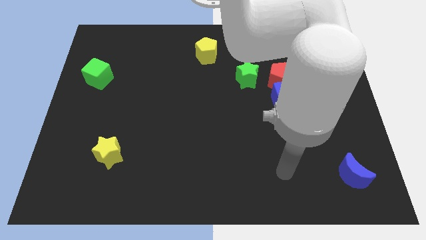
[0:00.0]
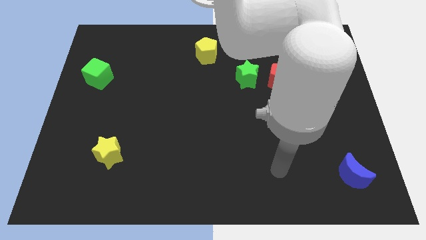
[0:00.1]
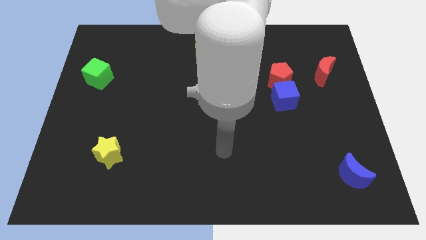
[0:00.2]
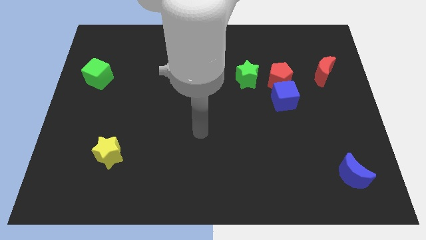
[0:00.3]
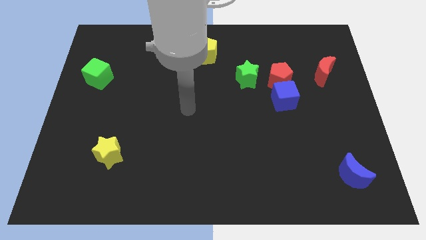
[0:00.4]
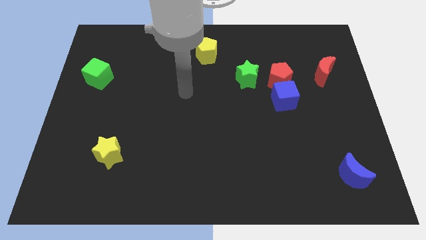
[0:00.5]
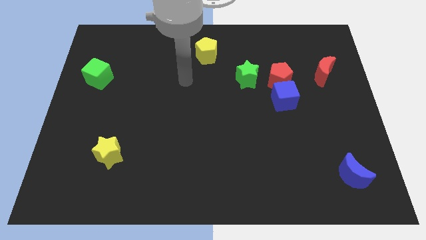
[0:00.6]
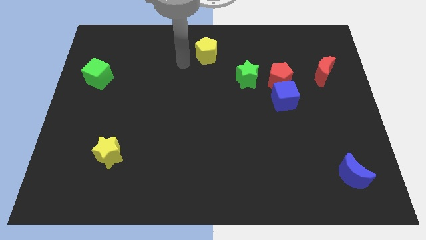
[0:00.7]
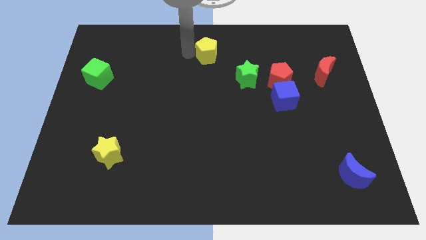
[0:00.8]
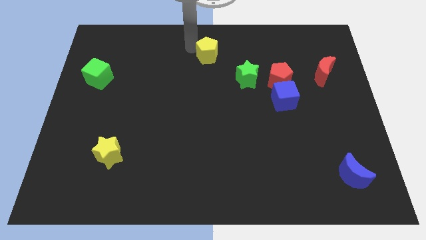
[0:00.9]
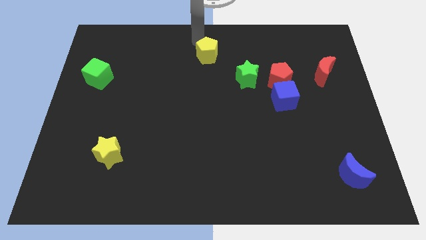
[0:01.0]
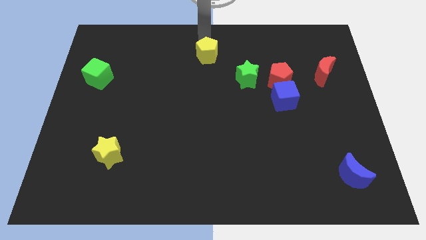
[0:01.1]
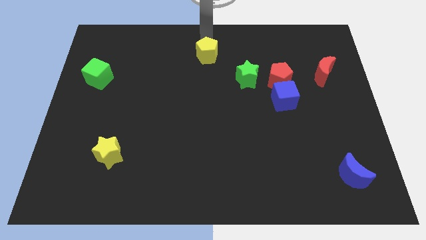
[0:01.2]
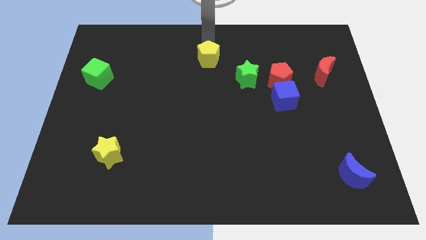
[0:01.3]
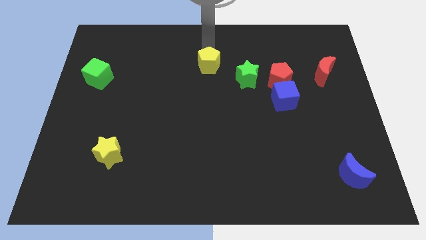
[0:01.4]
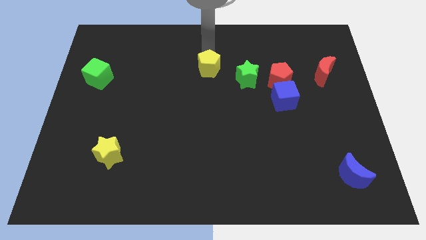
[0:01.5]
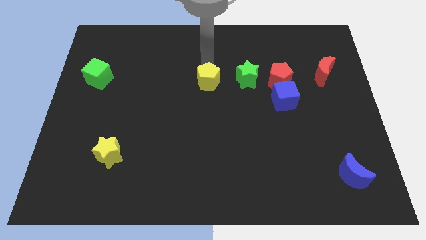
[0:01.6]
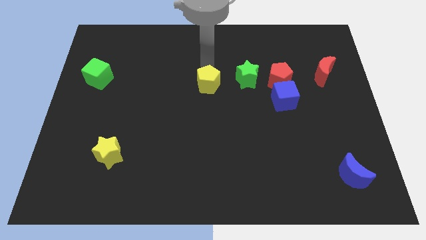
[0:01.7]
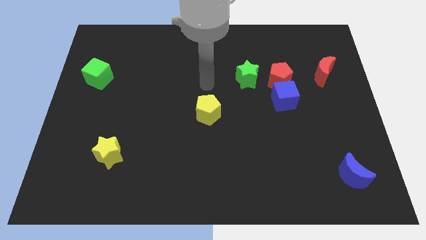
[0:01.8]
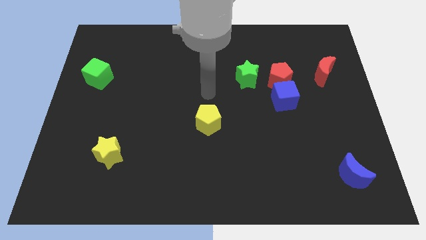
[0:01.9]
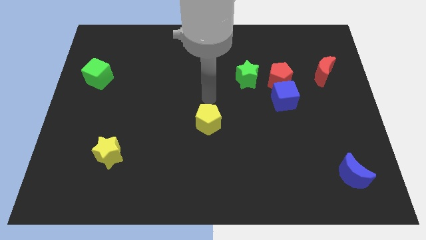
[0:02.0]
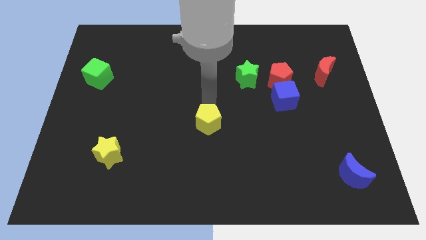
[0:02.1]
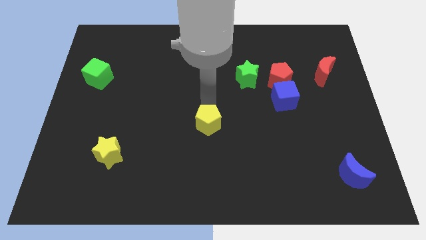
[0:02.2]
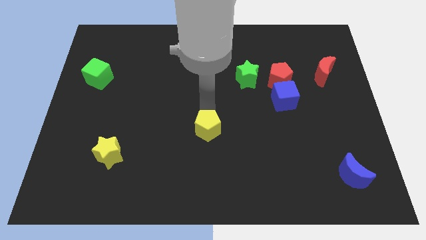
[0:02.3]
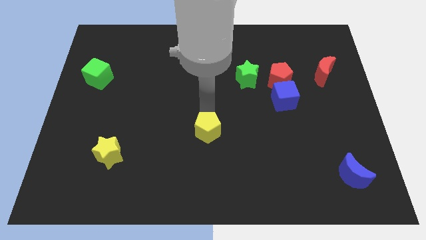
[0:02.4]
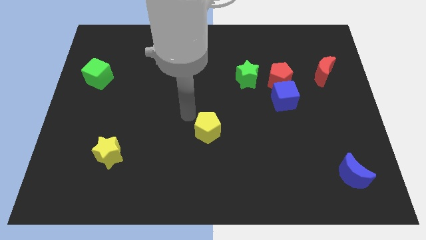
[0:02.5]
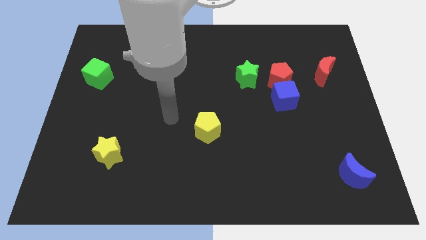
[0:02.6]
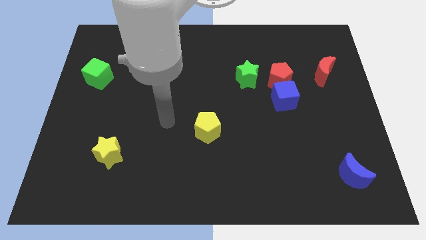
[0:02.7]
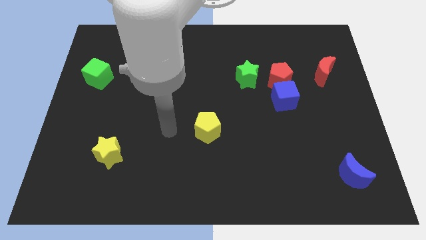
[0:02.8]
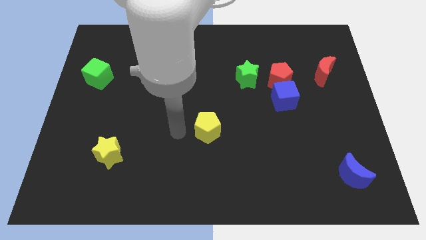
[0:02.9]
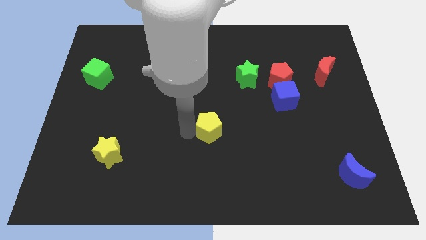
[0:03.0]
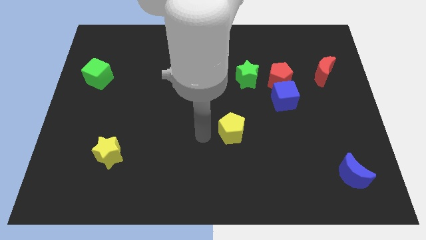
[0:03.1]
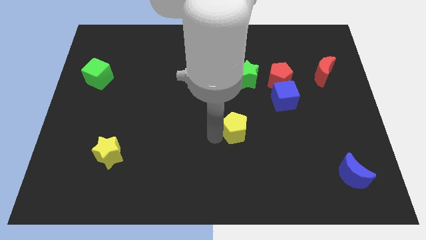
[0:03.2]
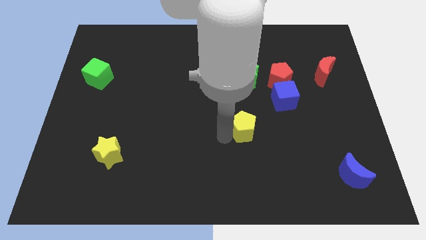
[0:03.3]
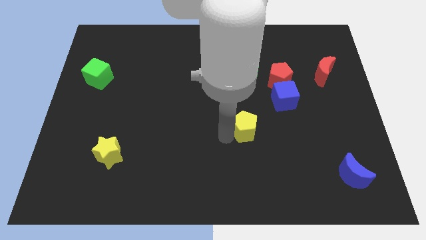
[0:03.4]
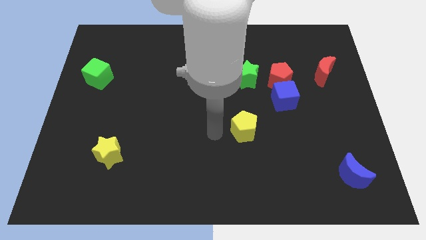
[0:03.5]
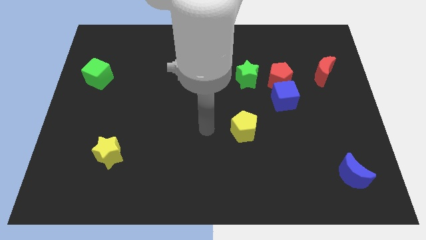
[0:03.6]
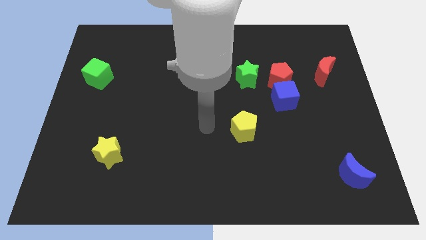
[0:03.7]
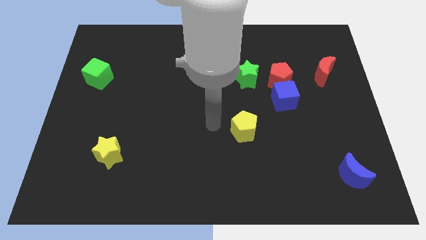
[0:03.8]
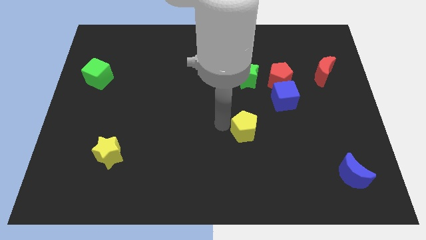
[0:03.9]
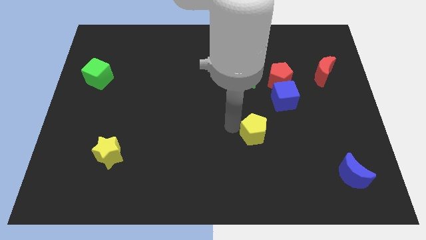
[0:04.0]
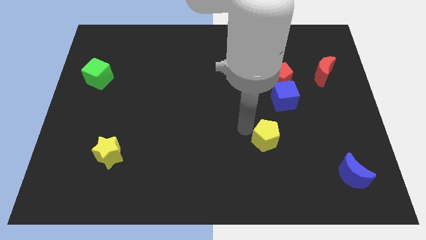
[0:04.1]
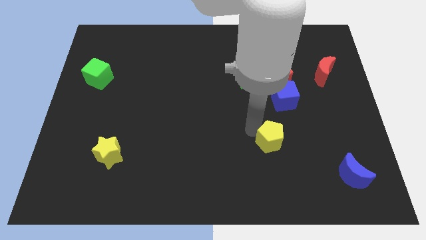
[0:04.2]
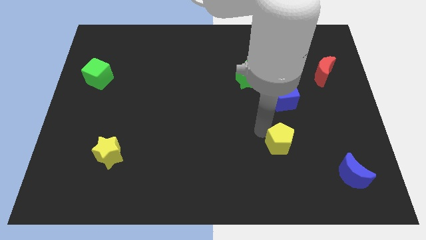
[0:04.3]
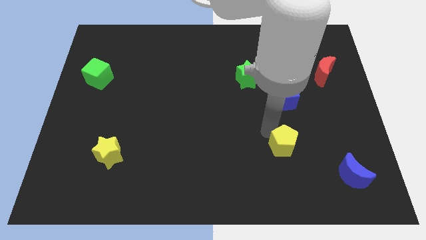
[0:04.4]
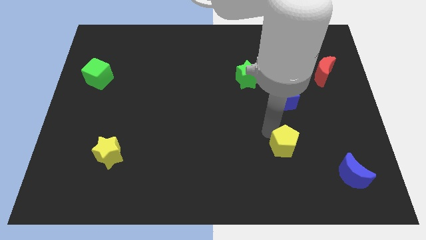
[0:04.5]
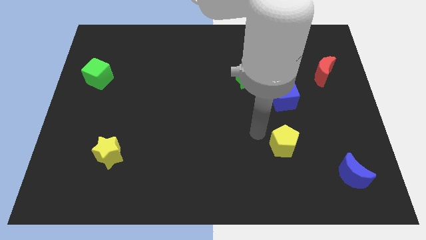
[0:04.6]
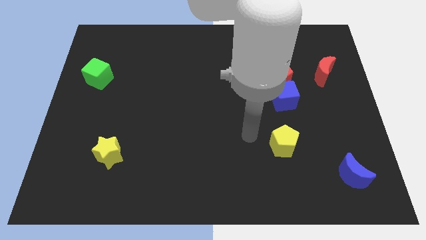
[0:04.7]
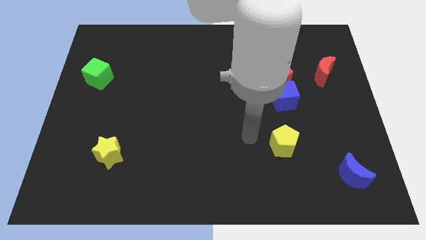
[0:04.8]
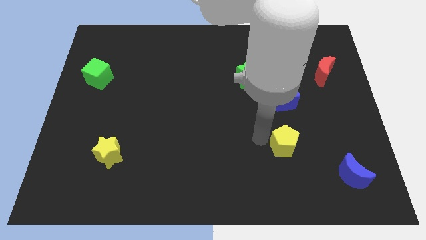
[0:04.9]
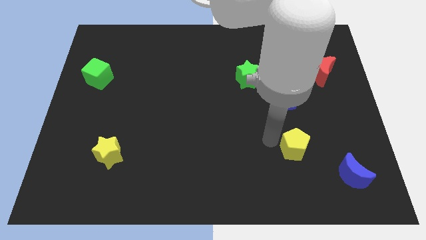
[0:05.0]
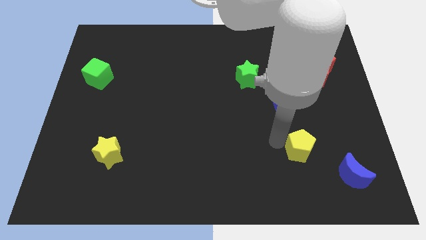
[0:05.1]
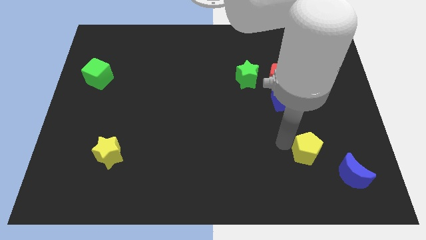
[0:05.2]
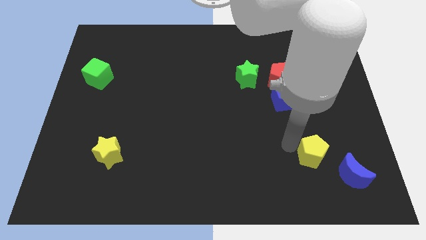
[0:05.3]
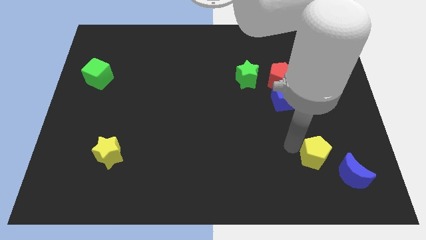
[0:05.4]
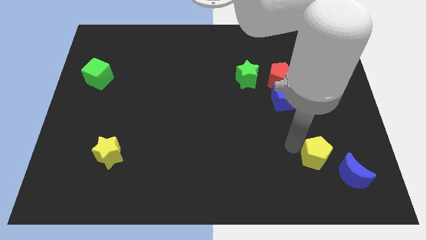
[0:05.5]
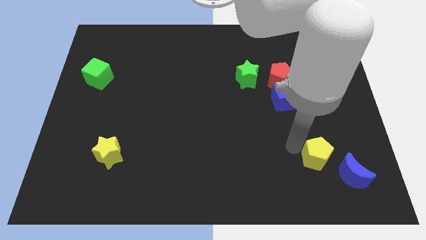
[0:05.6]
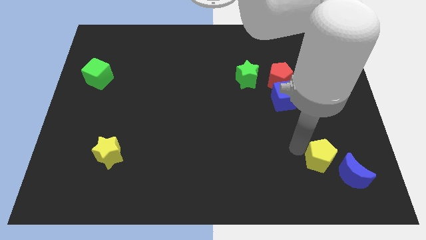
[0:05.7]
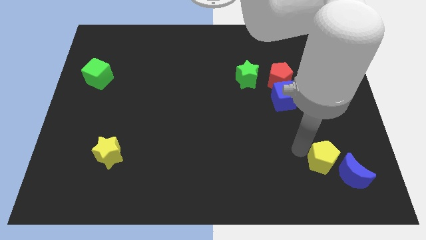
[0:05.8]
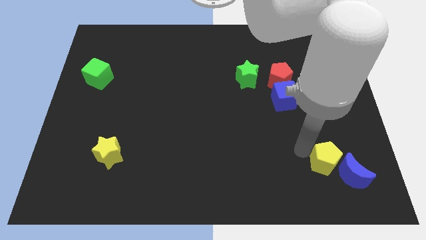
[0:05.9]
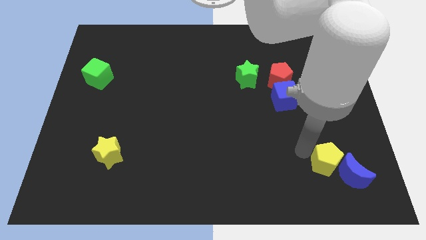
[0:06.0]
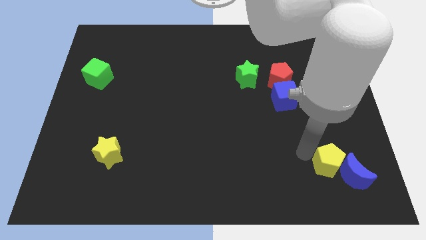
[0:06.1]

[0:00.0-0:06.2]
put the yellow pentagon towards the blue moon

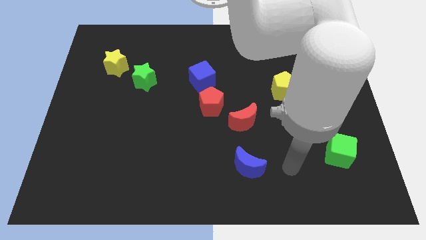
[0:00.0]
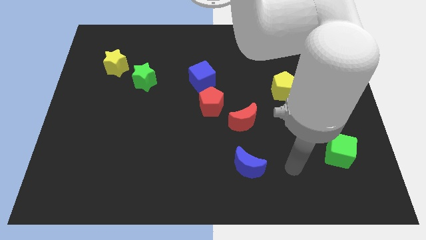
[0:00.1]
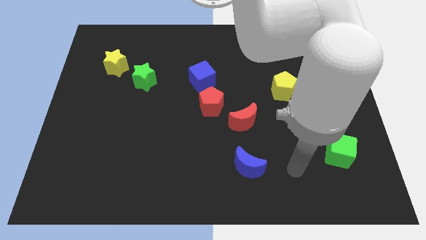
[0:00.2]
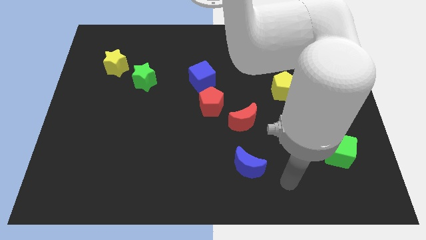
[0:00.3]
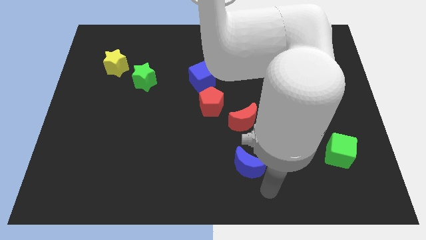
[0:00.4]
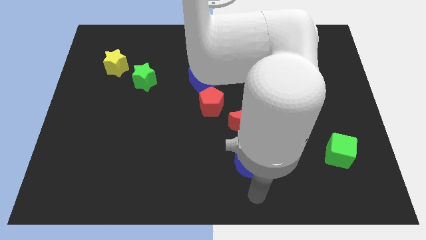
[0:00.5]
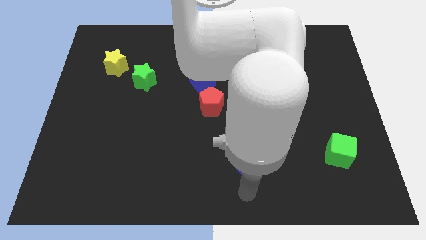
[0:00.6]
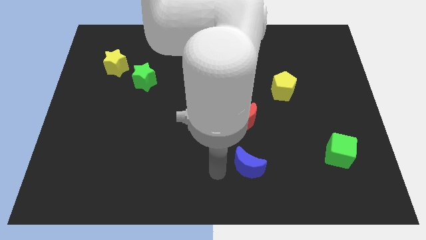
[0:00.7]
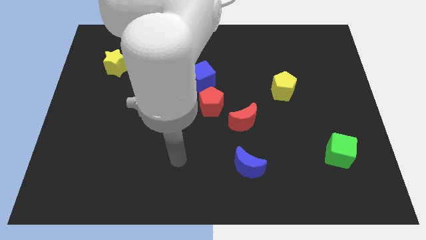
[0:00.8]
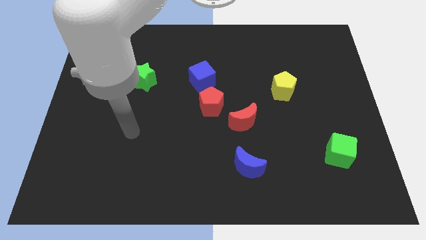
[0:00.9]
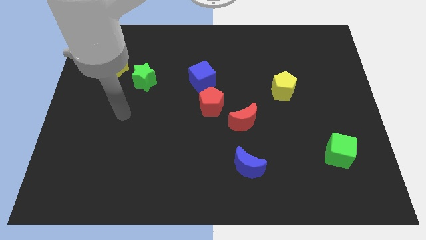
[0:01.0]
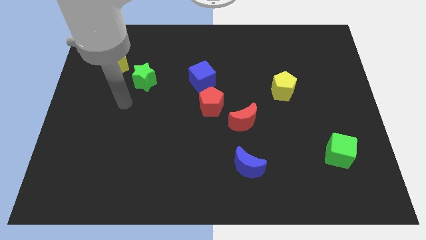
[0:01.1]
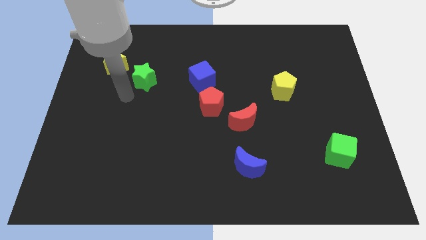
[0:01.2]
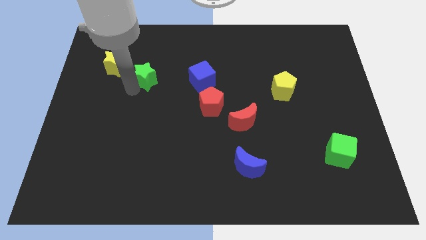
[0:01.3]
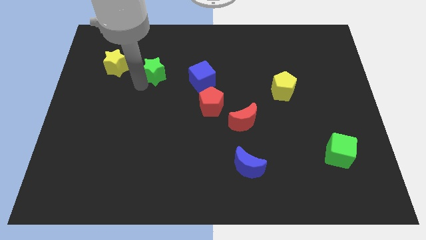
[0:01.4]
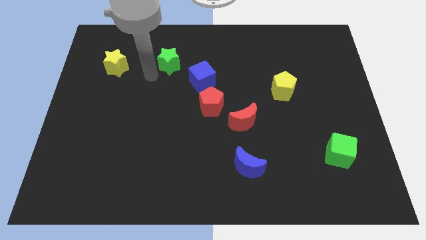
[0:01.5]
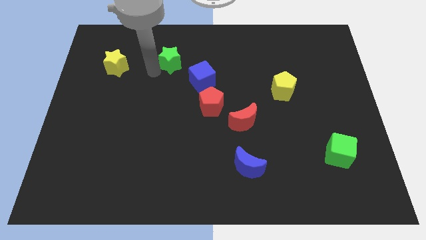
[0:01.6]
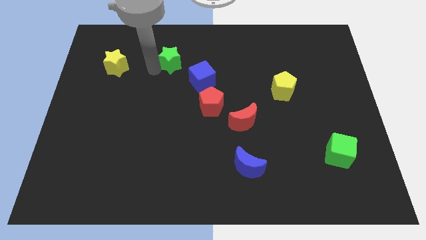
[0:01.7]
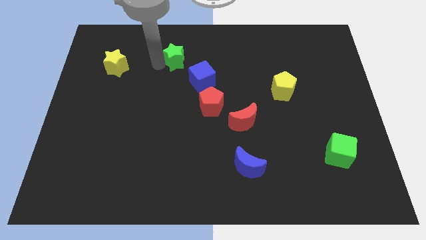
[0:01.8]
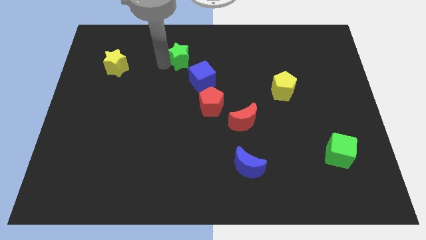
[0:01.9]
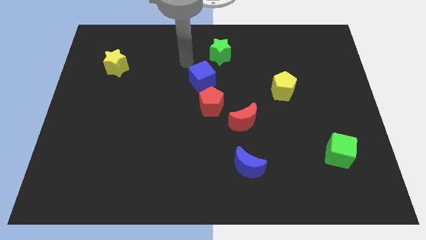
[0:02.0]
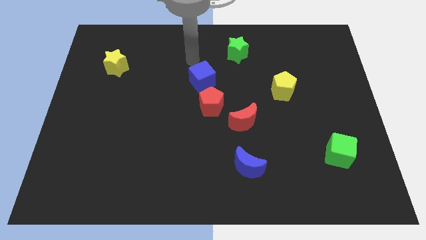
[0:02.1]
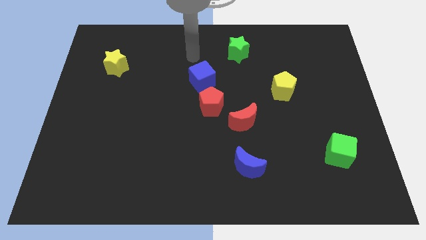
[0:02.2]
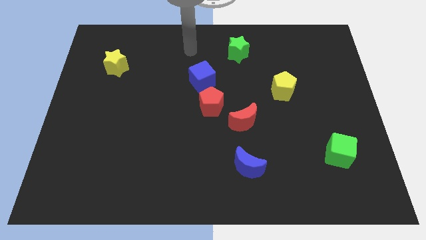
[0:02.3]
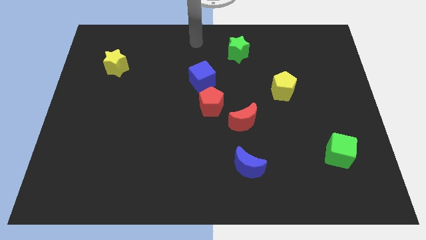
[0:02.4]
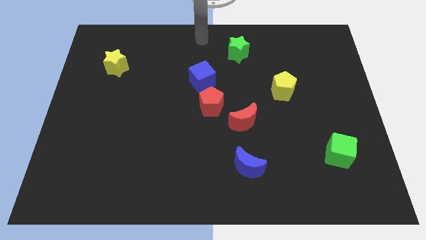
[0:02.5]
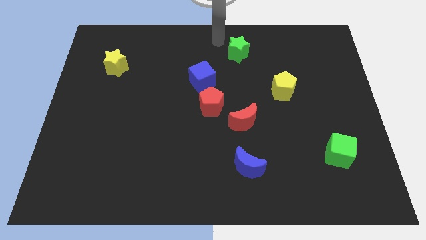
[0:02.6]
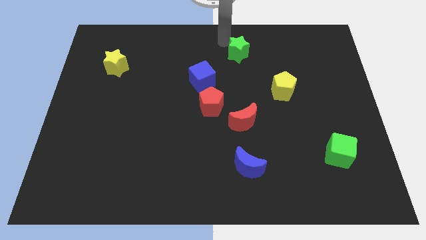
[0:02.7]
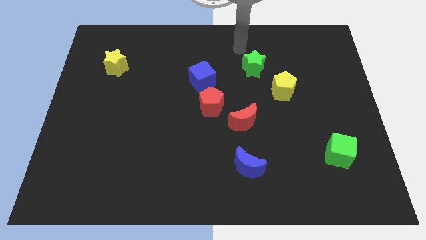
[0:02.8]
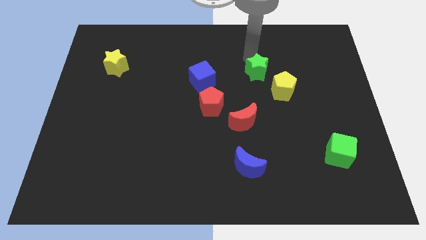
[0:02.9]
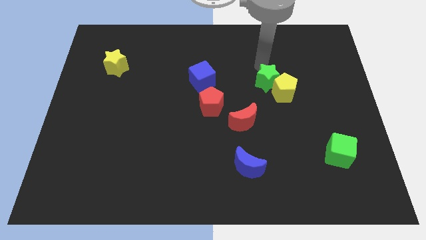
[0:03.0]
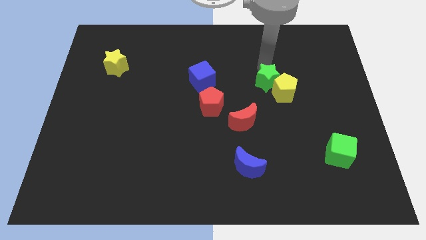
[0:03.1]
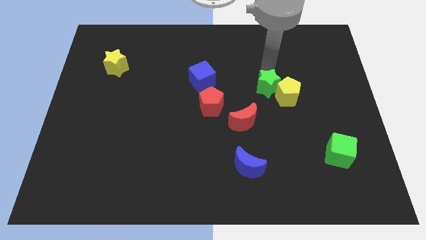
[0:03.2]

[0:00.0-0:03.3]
slide the green star to the yellow pentagon
